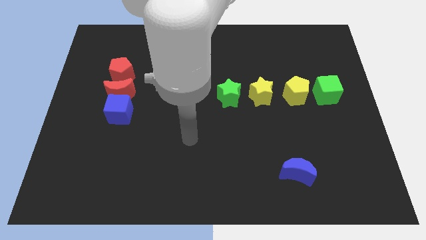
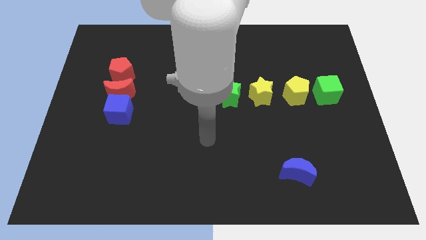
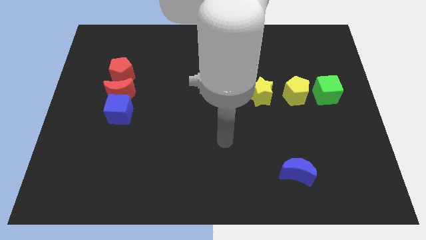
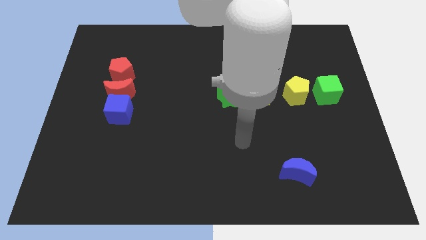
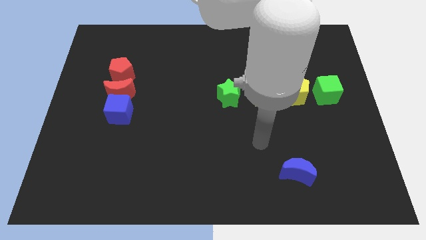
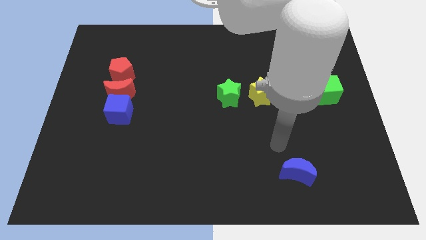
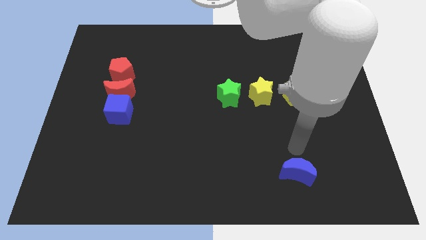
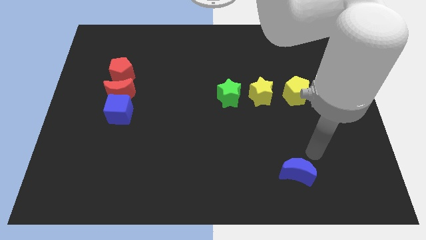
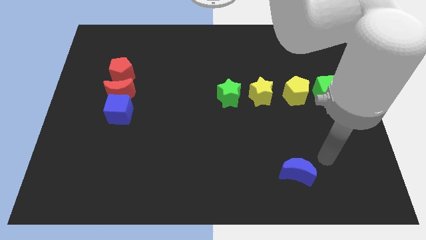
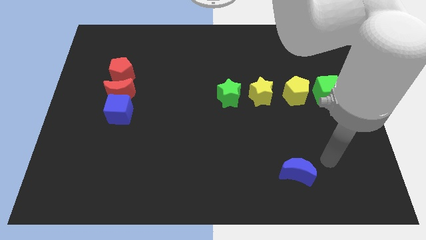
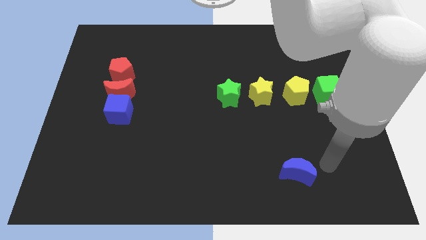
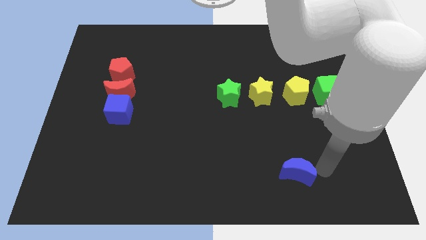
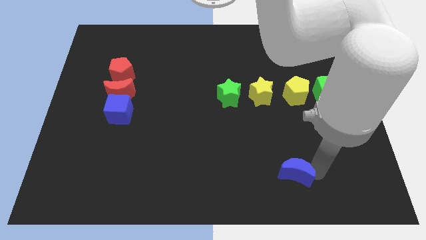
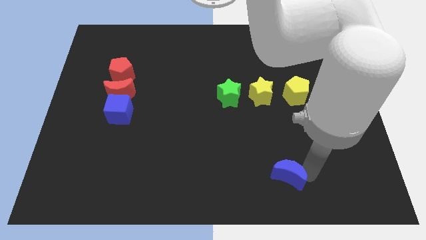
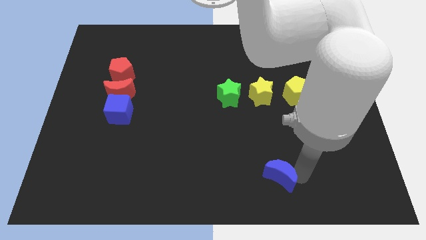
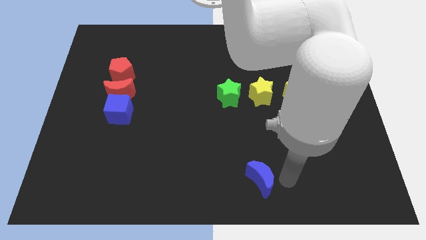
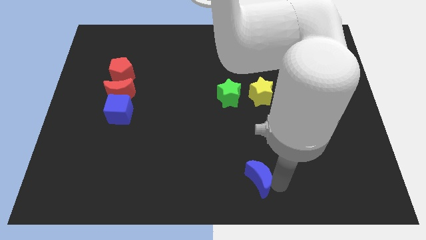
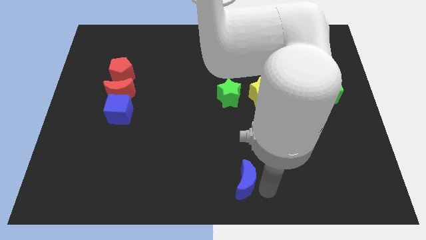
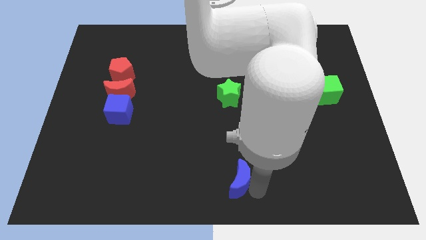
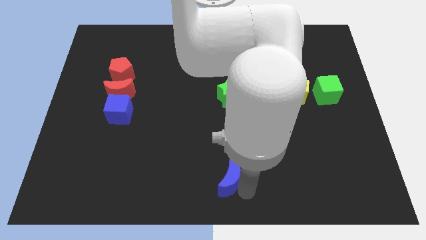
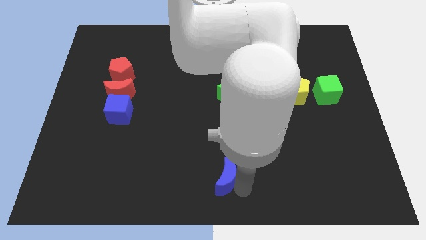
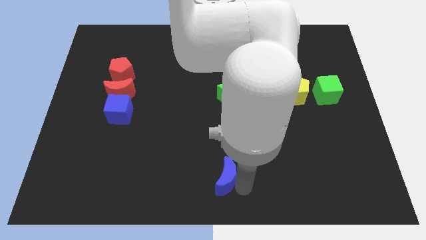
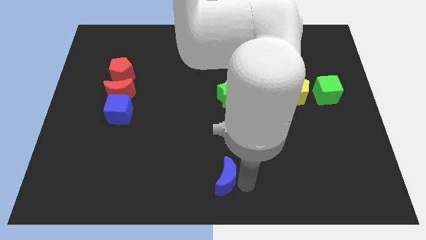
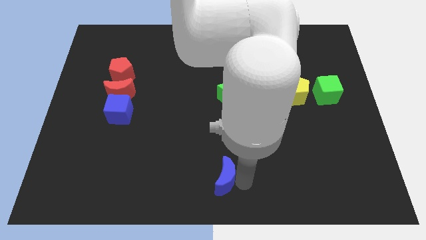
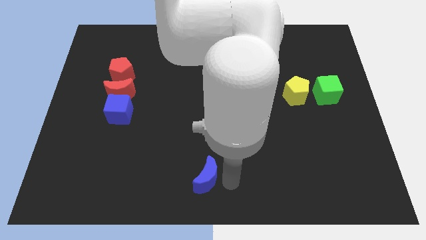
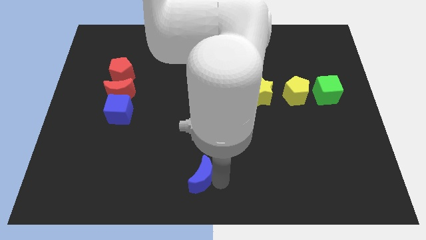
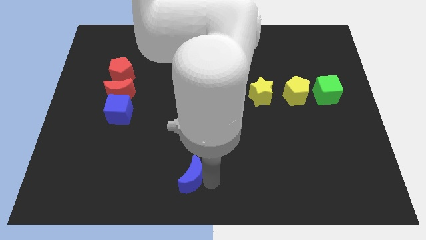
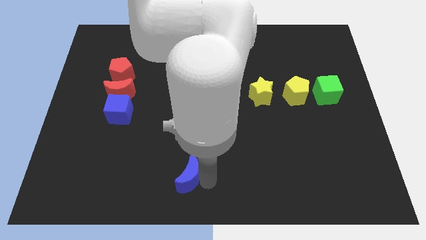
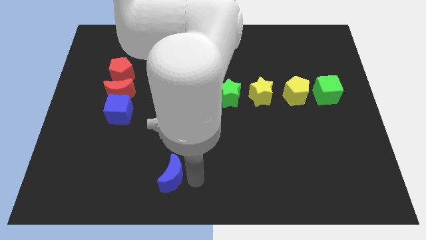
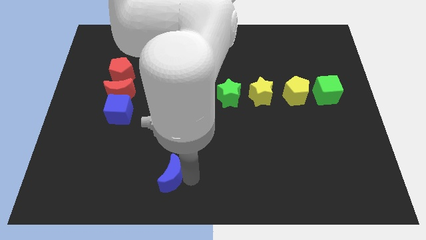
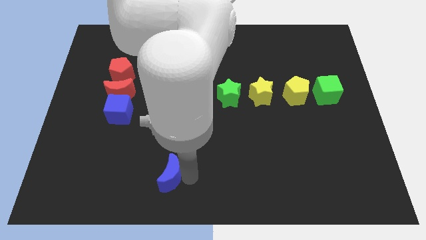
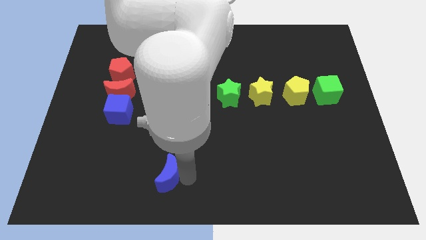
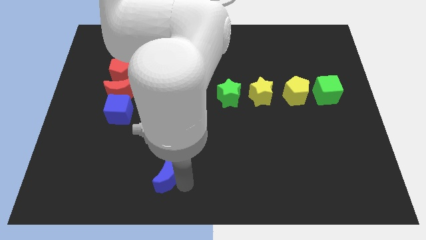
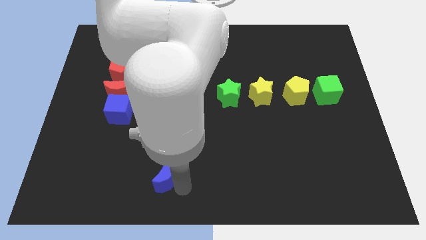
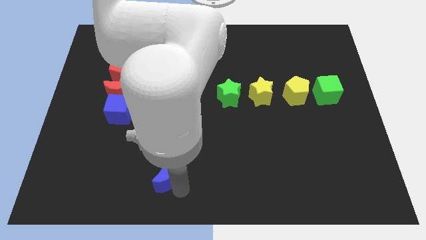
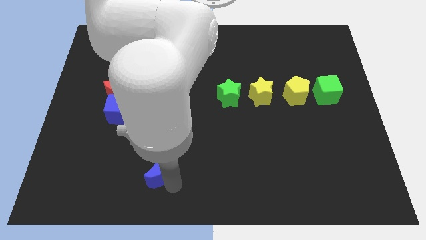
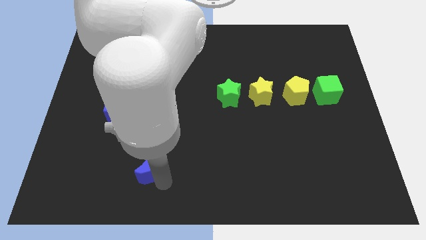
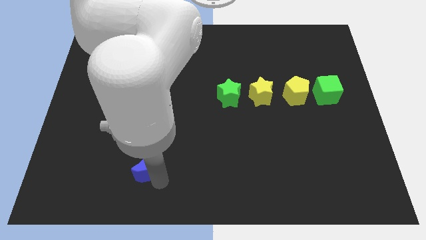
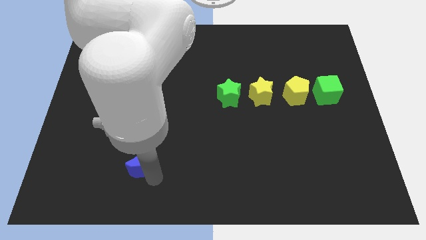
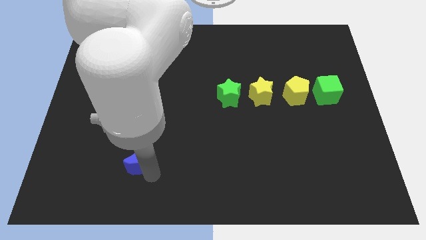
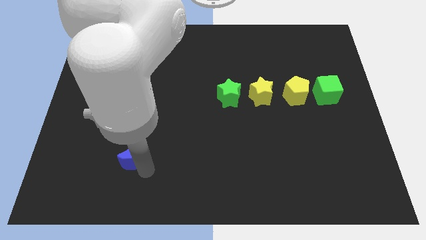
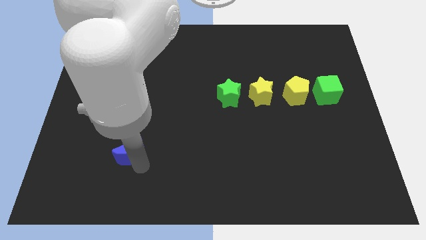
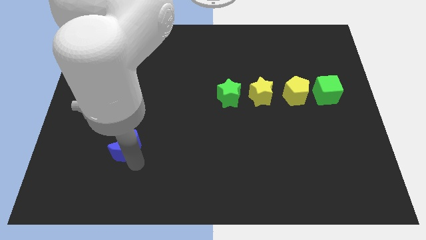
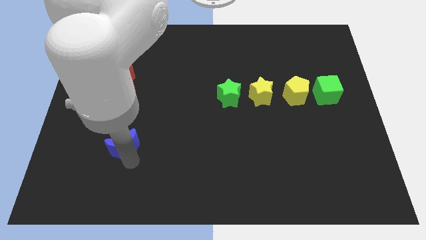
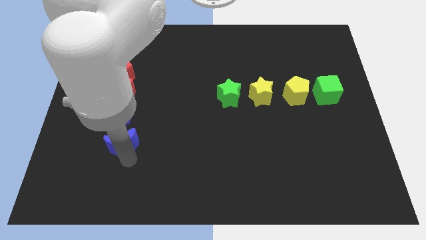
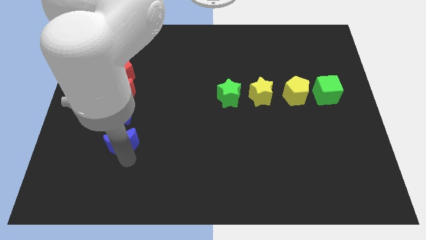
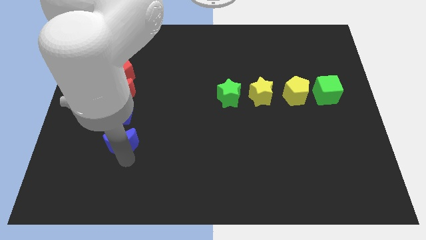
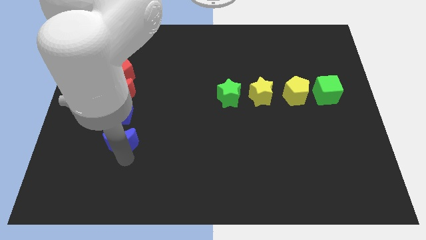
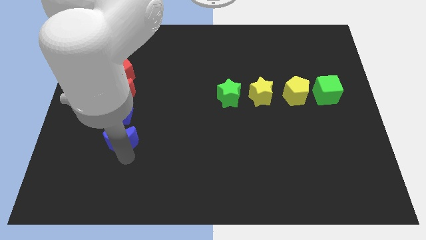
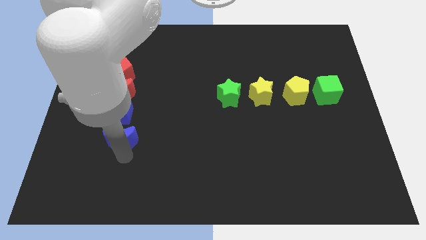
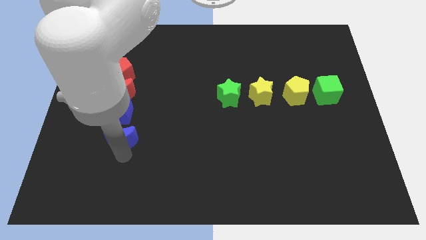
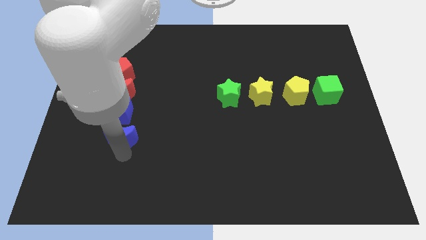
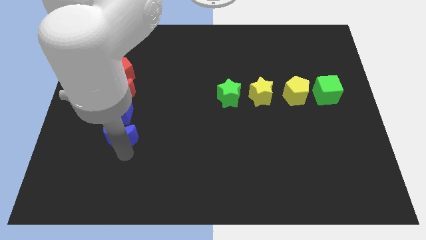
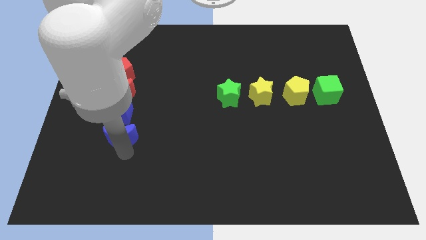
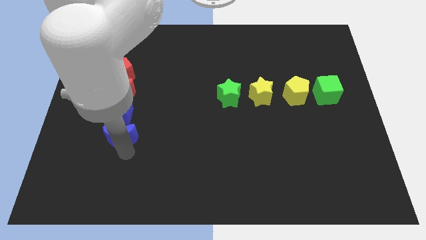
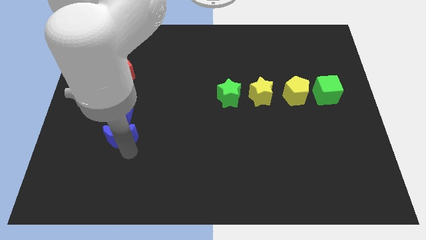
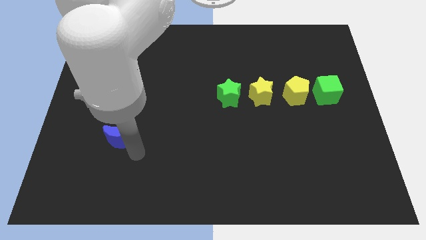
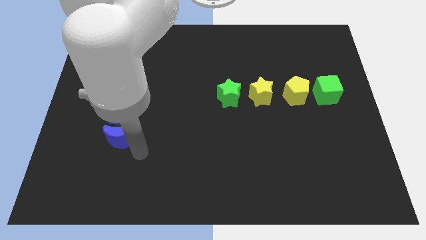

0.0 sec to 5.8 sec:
place the blue moon below the blue cube

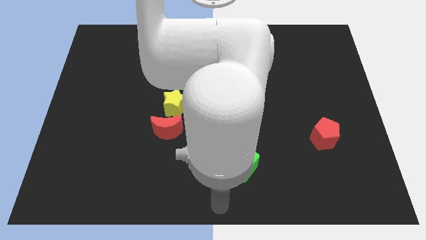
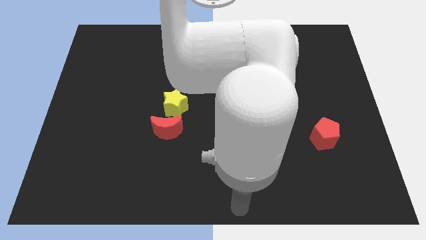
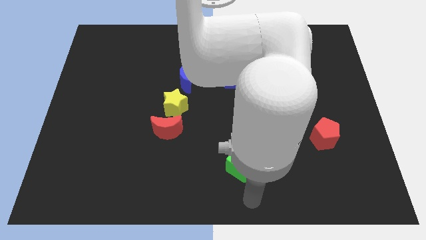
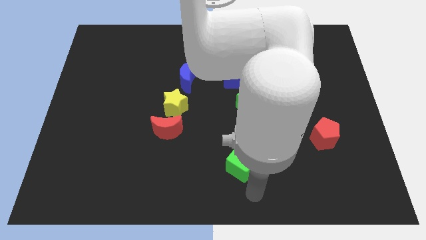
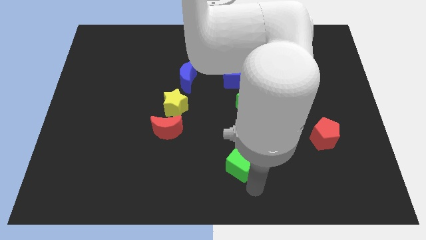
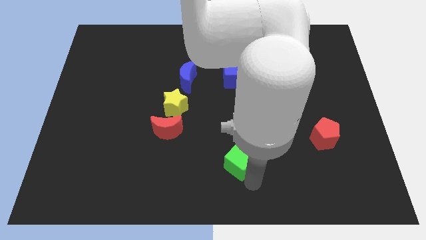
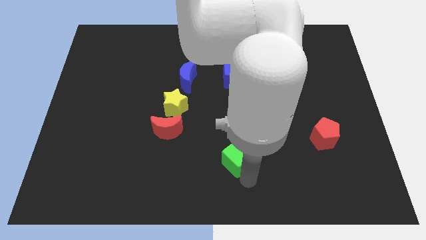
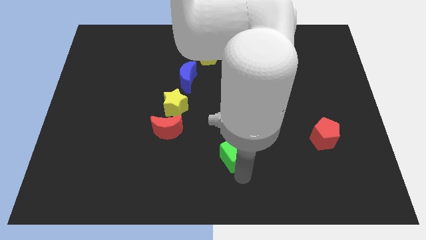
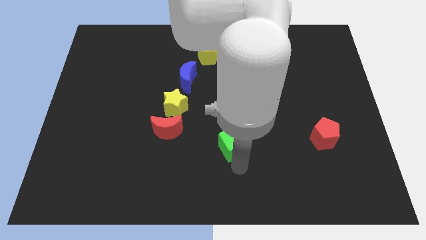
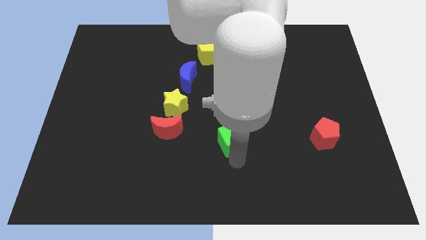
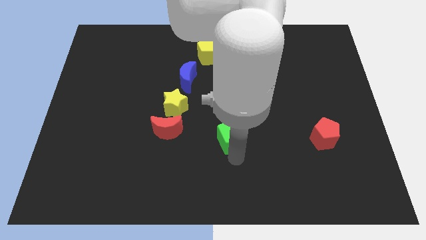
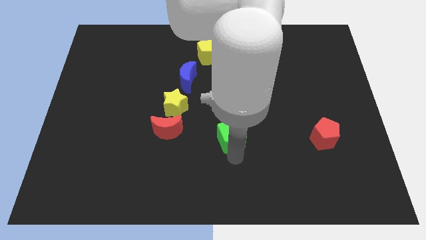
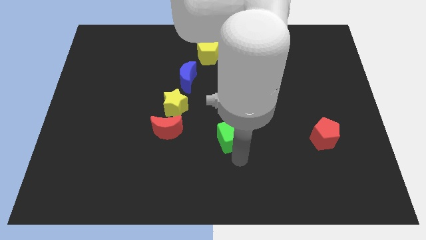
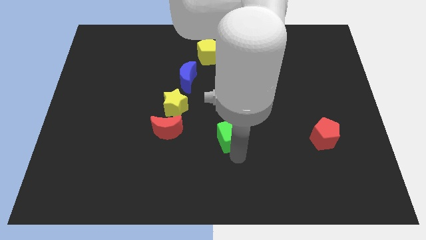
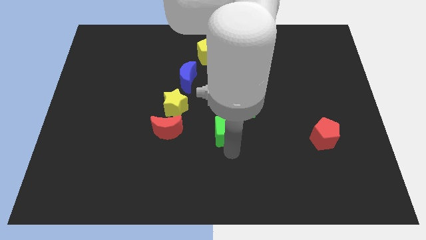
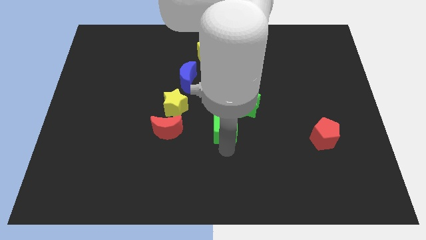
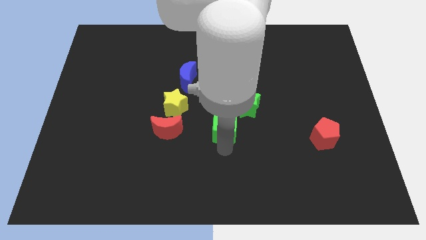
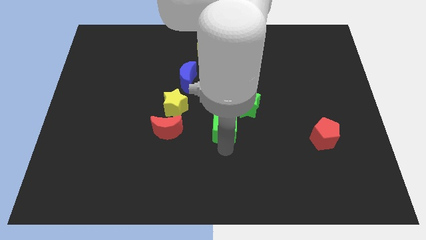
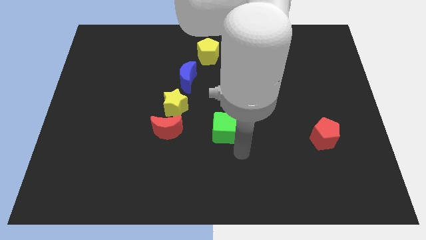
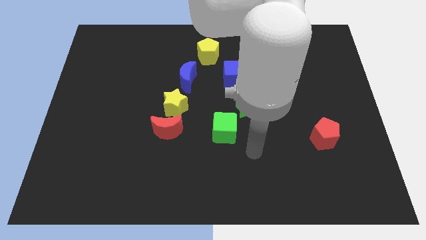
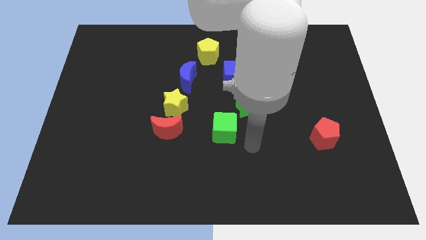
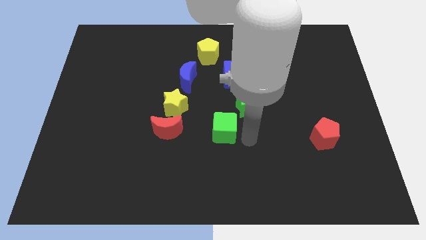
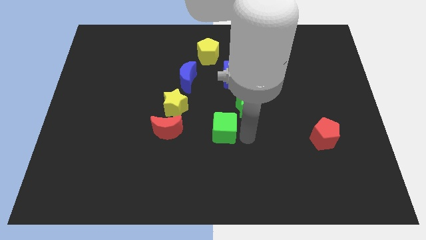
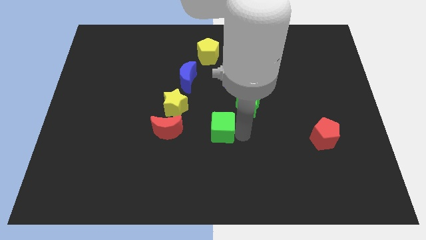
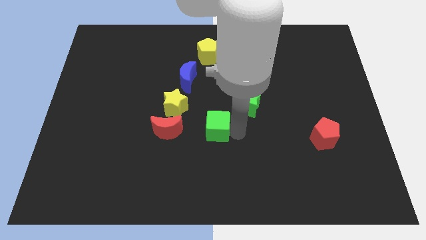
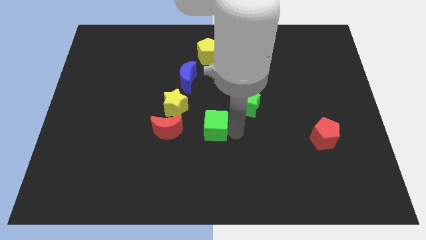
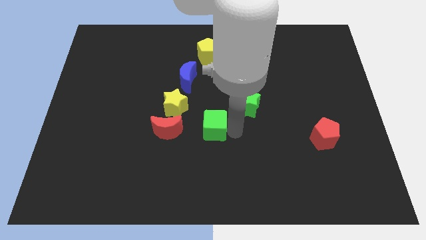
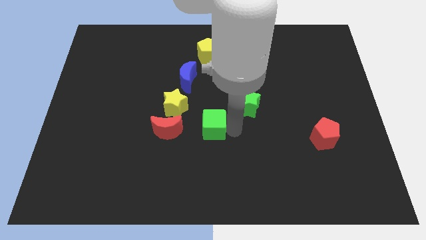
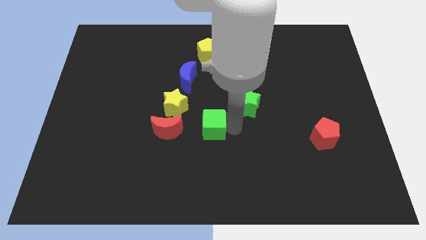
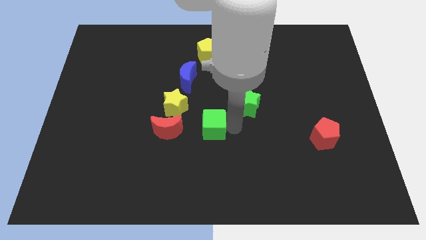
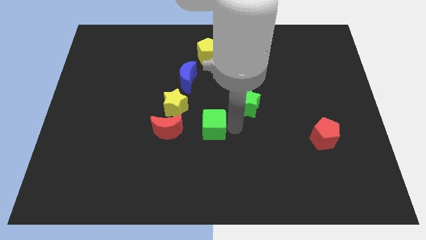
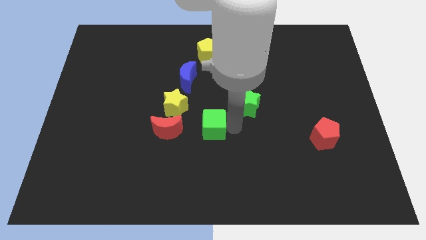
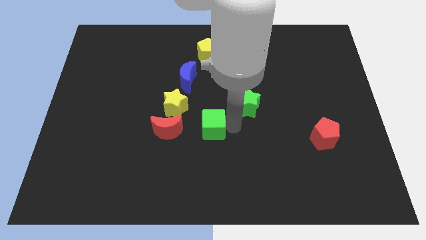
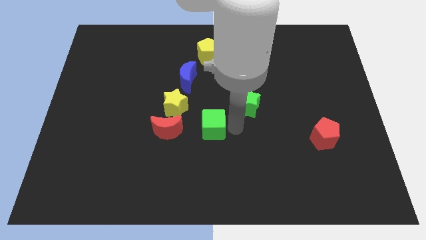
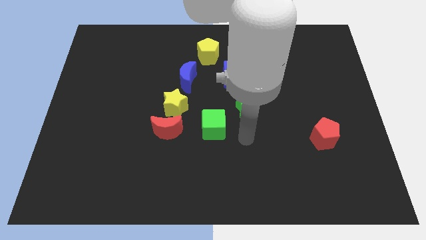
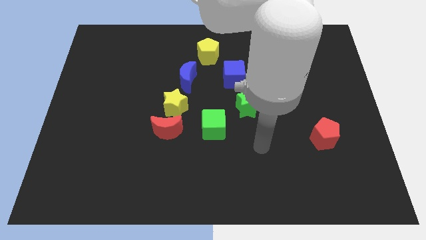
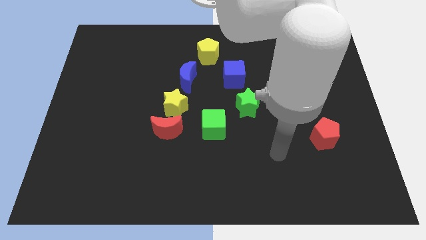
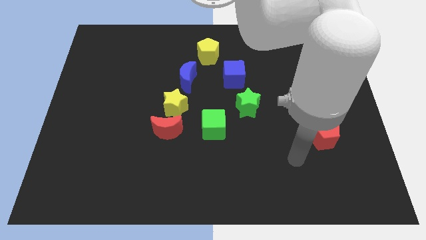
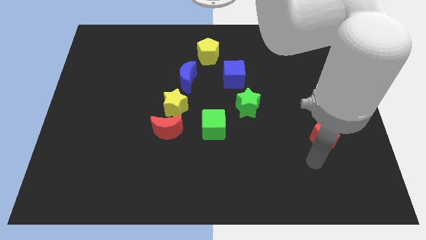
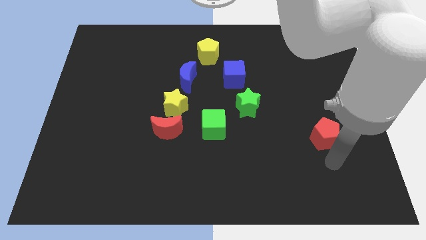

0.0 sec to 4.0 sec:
place the green cube to the right side of the red crescent
